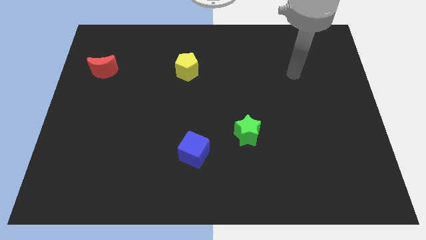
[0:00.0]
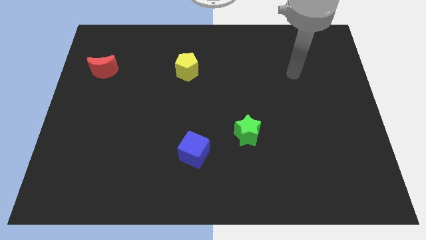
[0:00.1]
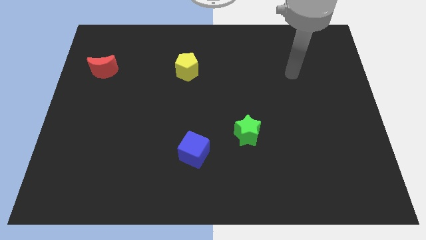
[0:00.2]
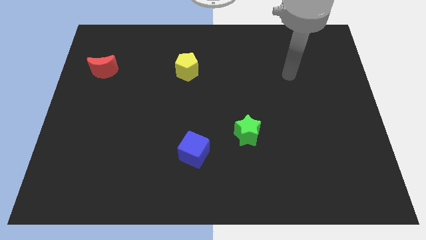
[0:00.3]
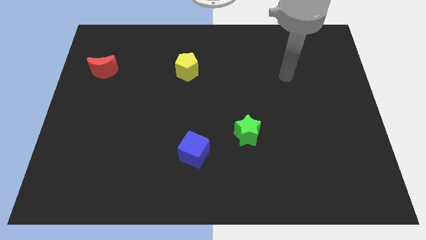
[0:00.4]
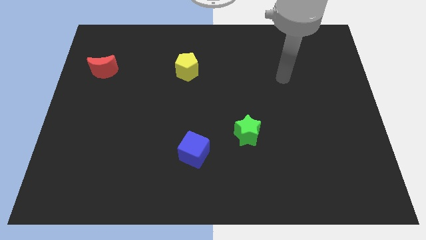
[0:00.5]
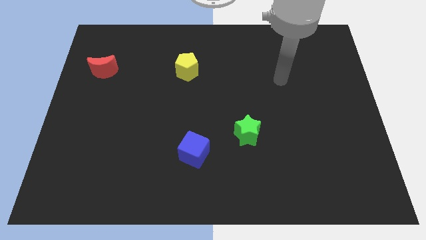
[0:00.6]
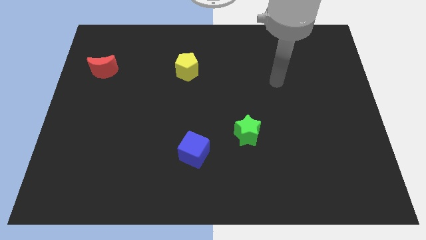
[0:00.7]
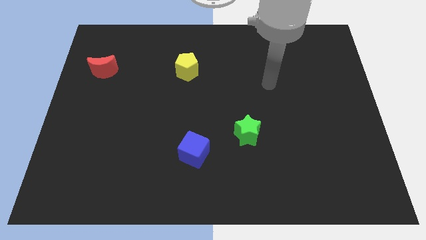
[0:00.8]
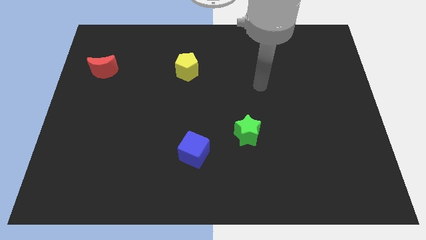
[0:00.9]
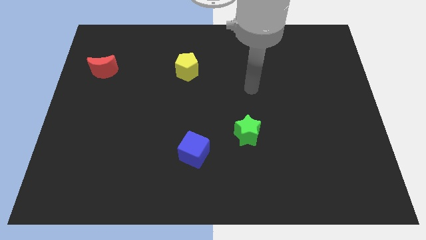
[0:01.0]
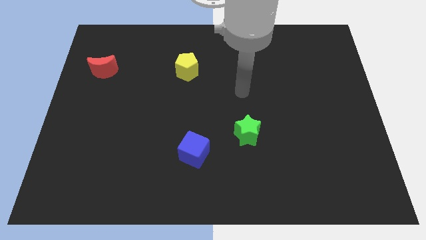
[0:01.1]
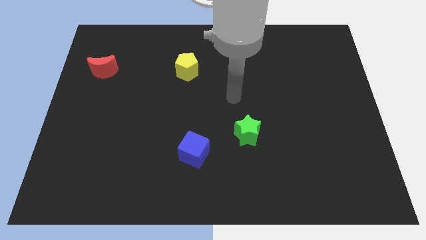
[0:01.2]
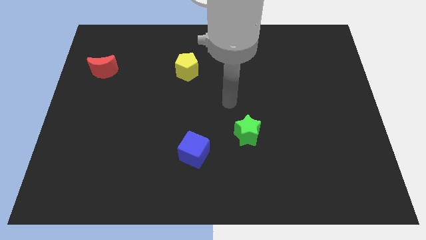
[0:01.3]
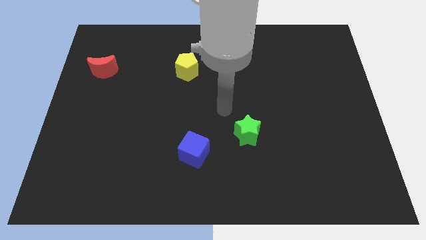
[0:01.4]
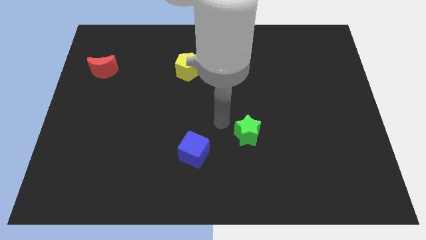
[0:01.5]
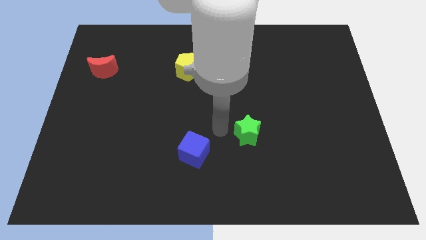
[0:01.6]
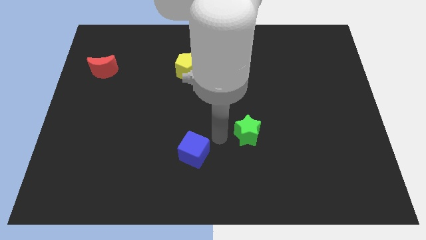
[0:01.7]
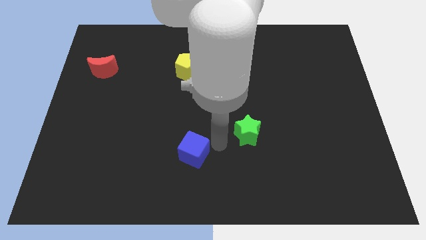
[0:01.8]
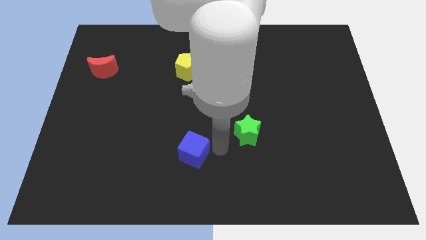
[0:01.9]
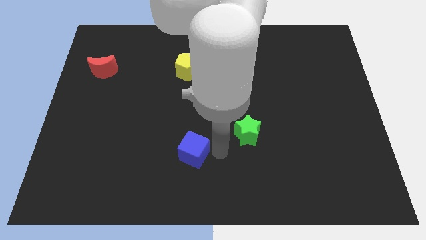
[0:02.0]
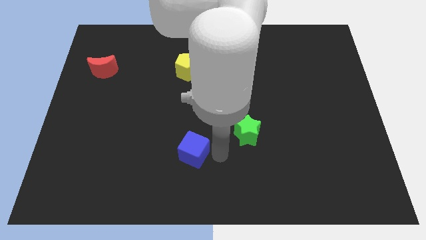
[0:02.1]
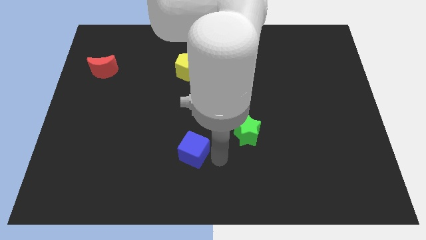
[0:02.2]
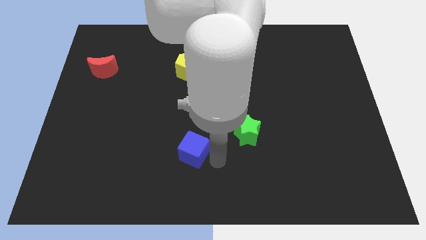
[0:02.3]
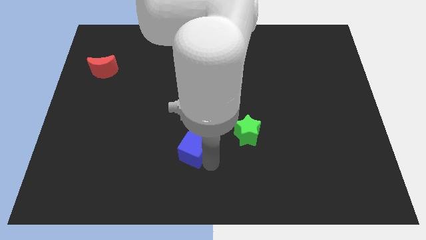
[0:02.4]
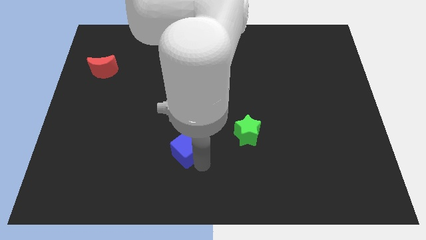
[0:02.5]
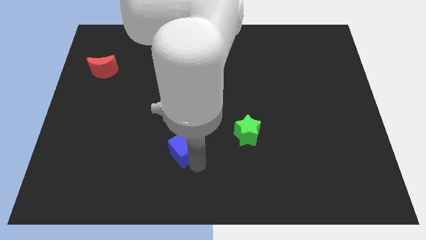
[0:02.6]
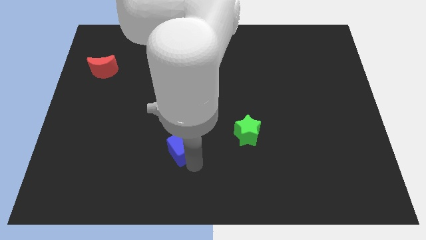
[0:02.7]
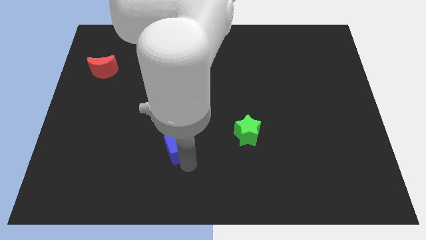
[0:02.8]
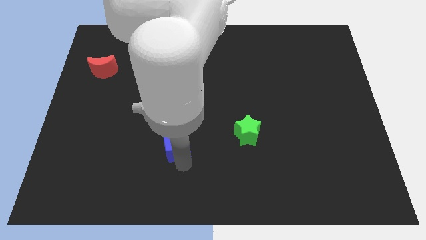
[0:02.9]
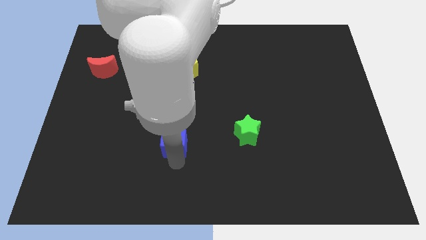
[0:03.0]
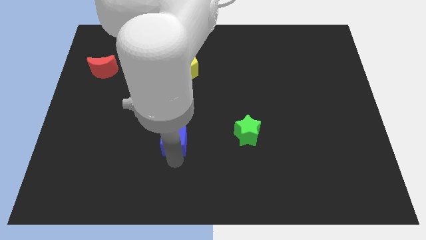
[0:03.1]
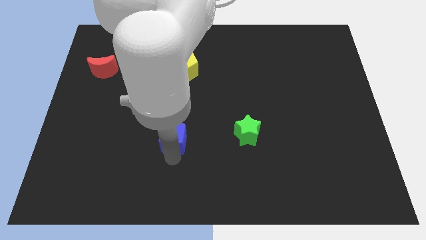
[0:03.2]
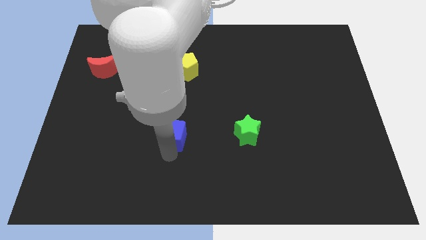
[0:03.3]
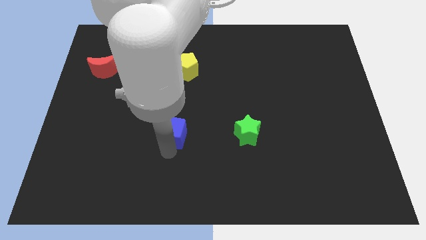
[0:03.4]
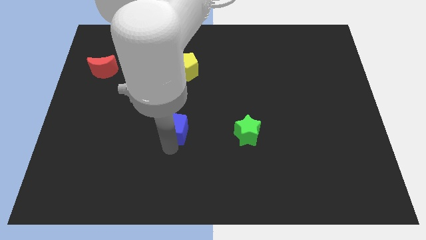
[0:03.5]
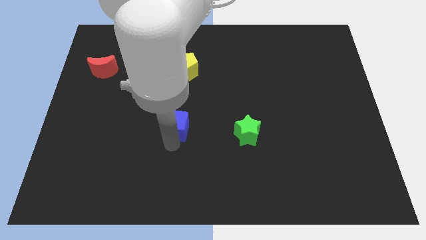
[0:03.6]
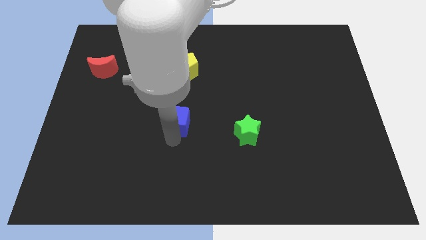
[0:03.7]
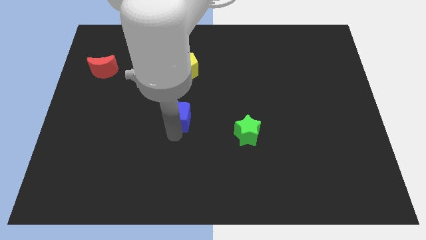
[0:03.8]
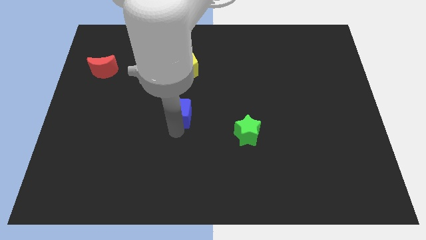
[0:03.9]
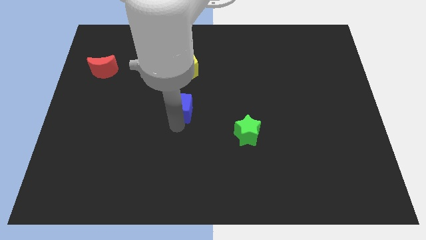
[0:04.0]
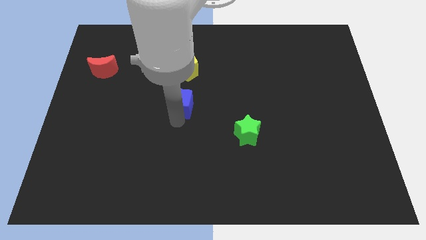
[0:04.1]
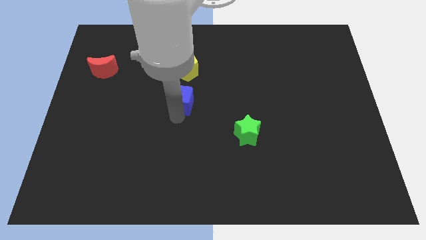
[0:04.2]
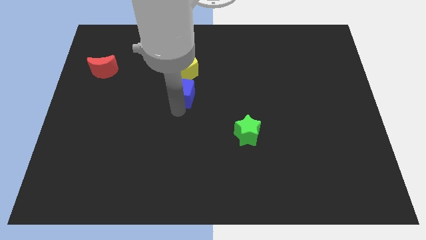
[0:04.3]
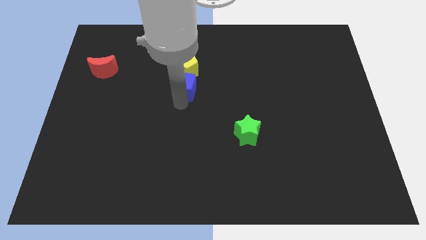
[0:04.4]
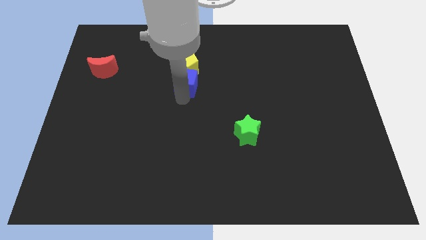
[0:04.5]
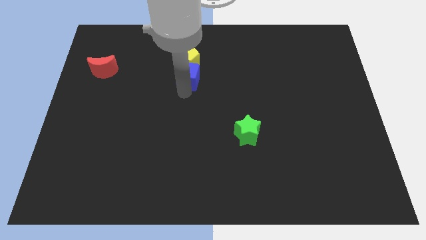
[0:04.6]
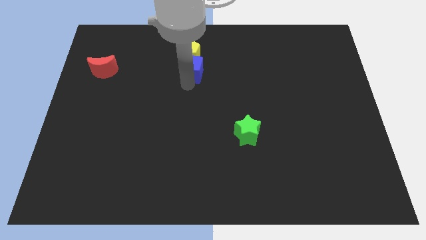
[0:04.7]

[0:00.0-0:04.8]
put the cube next to the yellow pentagon

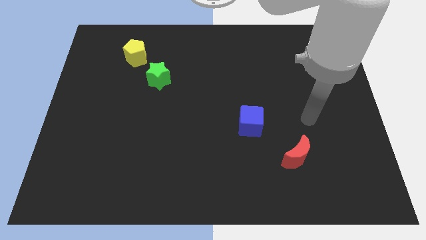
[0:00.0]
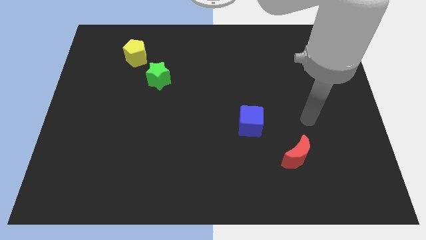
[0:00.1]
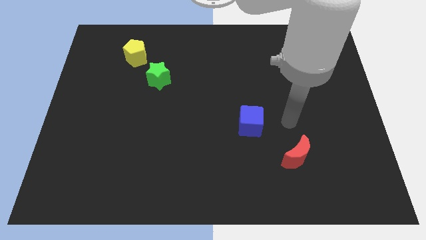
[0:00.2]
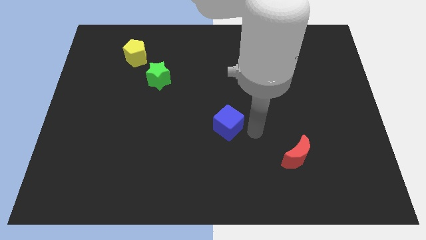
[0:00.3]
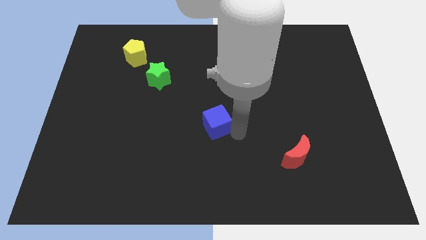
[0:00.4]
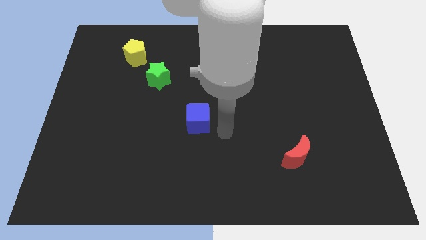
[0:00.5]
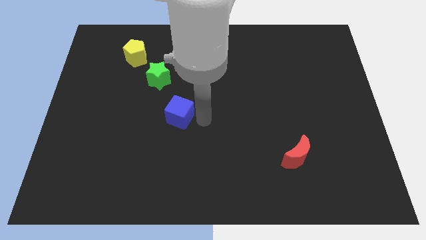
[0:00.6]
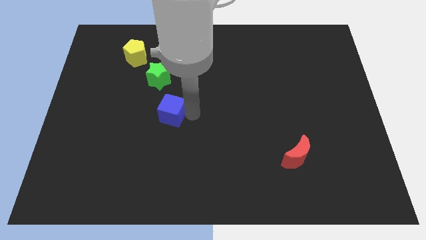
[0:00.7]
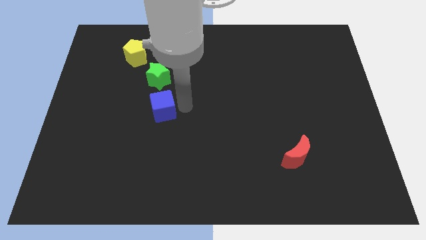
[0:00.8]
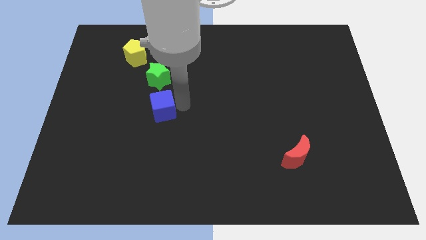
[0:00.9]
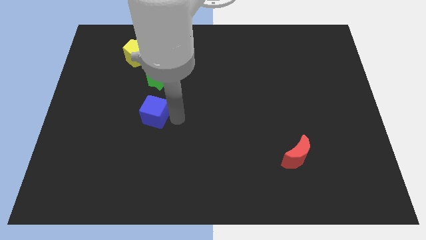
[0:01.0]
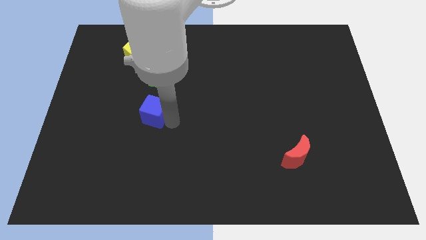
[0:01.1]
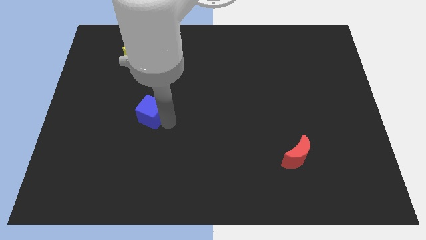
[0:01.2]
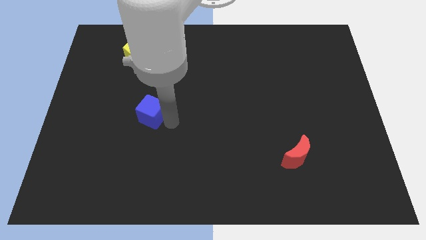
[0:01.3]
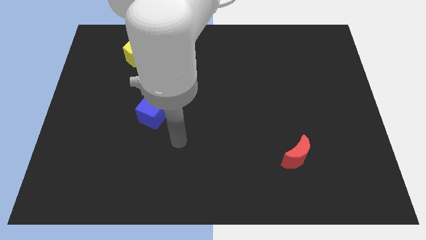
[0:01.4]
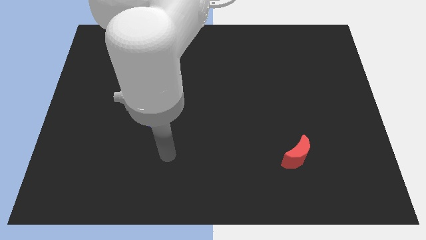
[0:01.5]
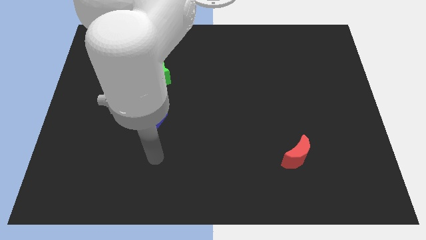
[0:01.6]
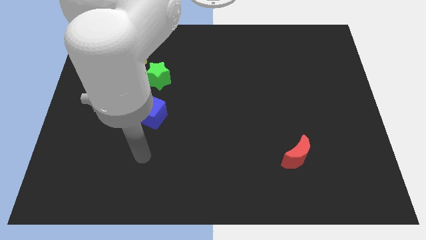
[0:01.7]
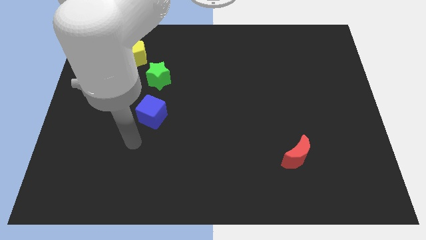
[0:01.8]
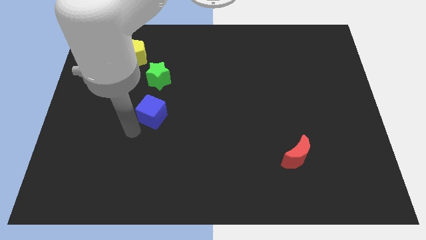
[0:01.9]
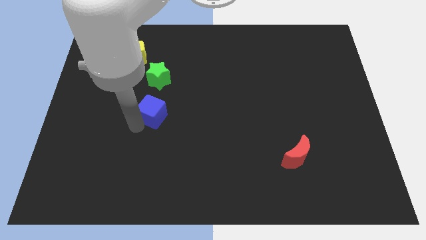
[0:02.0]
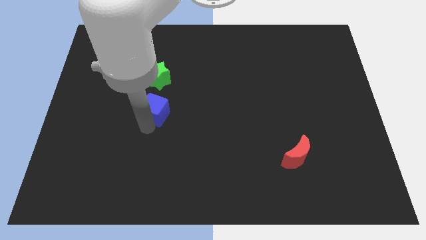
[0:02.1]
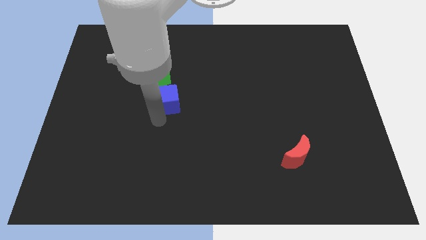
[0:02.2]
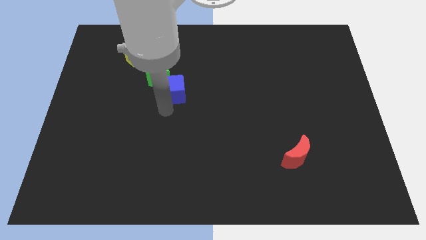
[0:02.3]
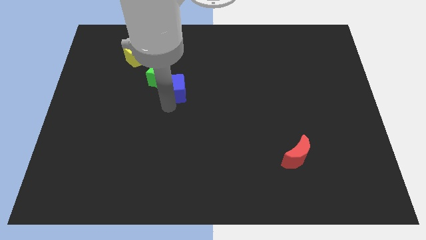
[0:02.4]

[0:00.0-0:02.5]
move the blue cube close to the star

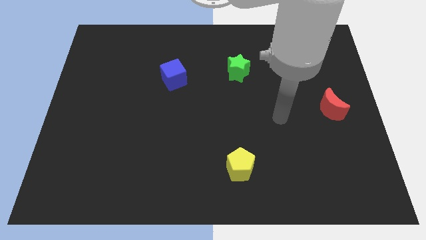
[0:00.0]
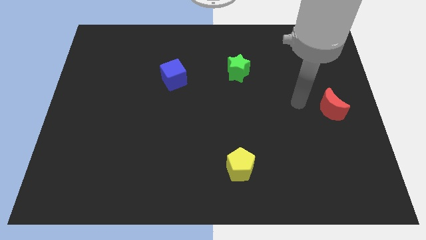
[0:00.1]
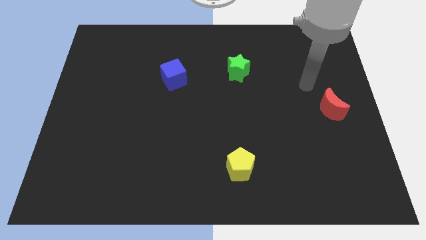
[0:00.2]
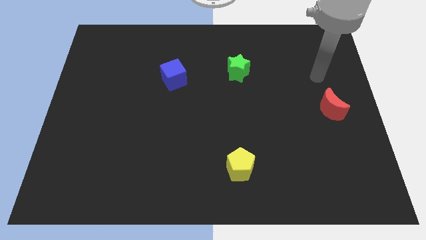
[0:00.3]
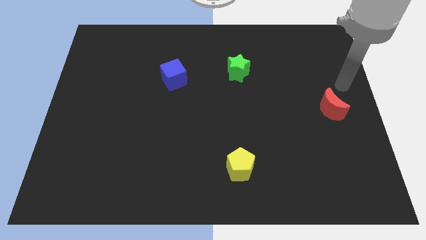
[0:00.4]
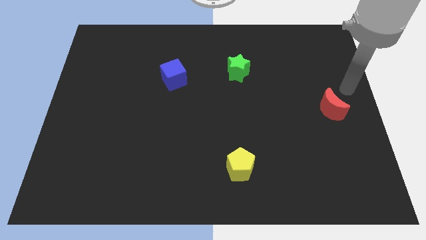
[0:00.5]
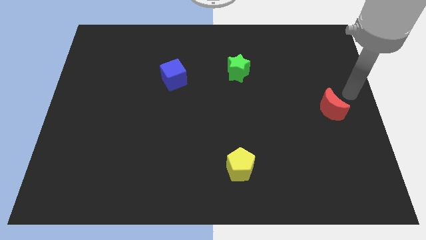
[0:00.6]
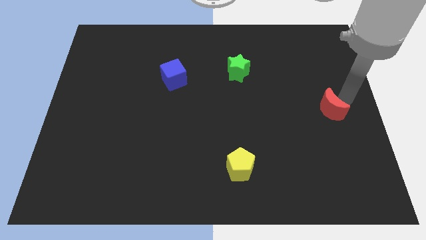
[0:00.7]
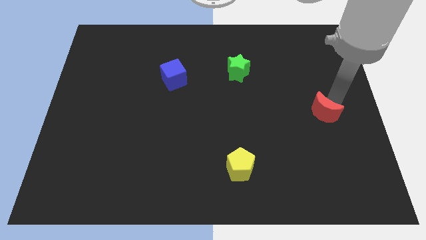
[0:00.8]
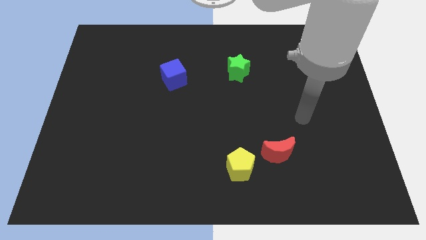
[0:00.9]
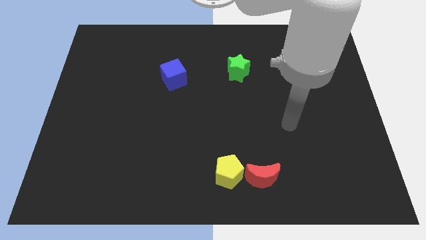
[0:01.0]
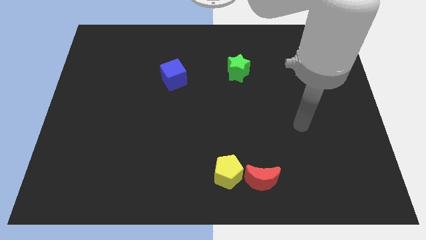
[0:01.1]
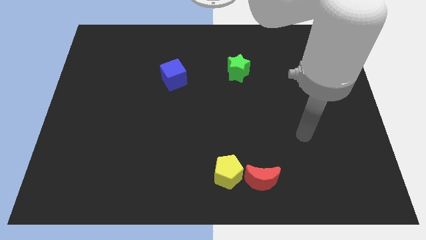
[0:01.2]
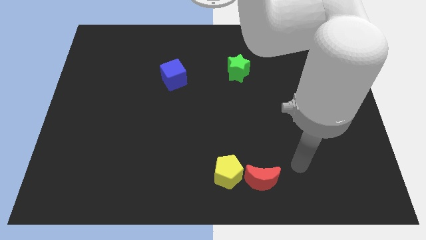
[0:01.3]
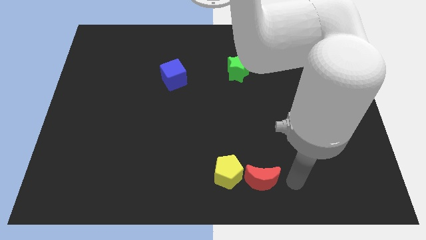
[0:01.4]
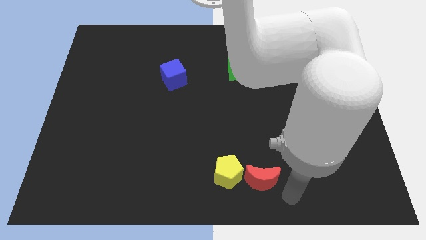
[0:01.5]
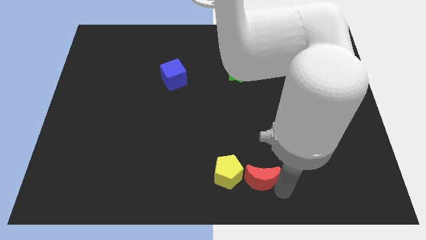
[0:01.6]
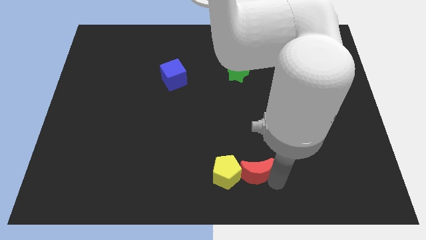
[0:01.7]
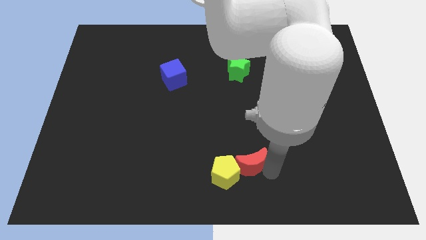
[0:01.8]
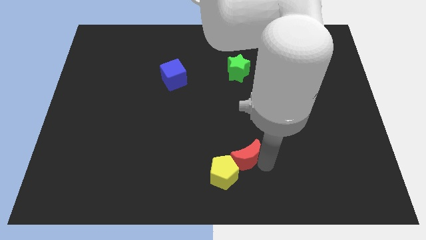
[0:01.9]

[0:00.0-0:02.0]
push the red block next to the yellow block
